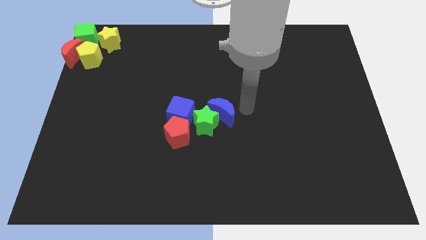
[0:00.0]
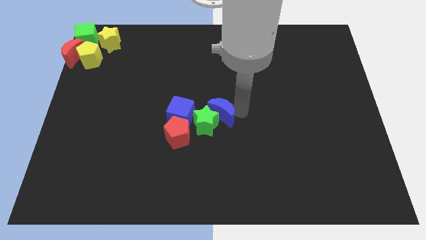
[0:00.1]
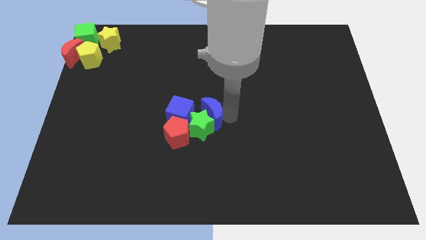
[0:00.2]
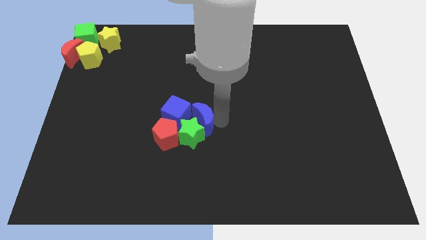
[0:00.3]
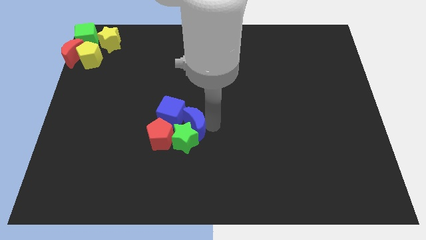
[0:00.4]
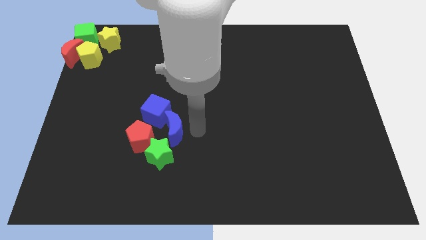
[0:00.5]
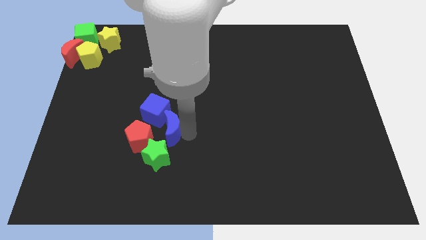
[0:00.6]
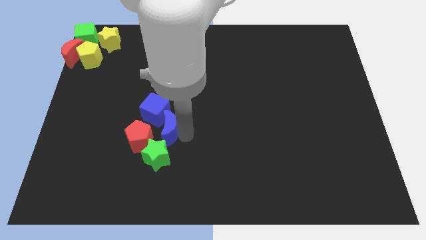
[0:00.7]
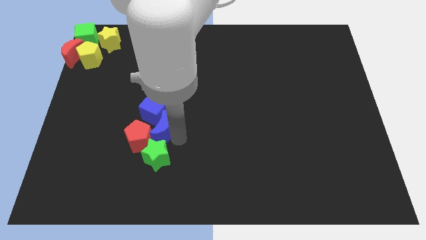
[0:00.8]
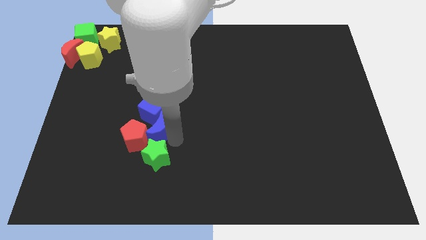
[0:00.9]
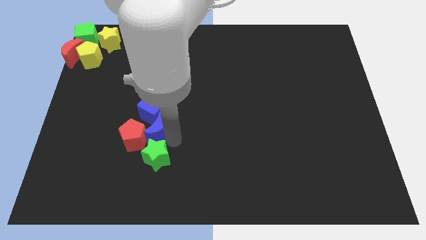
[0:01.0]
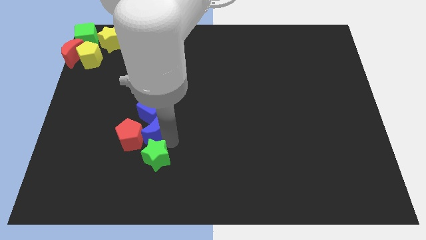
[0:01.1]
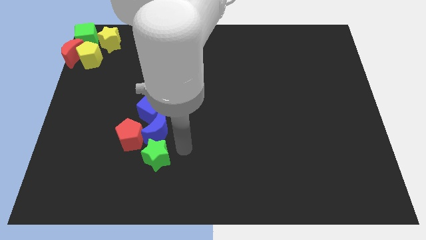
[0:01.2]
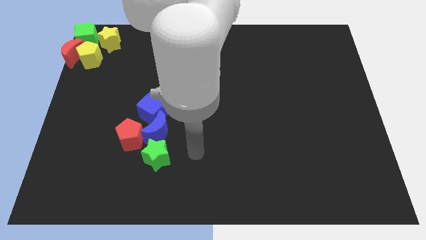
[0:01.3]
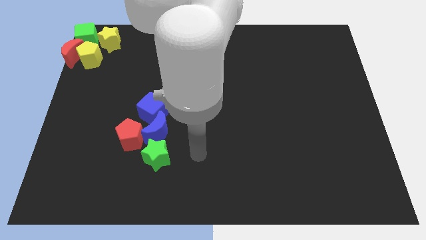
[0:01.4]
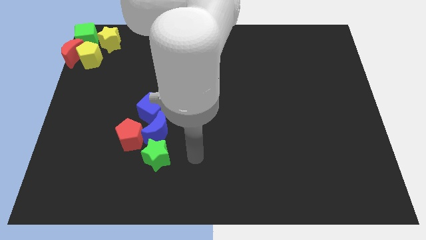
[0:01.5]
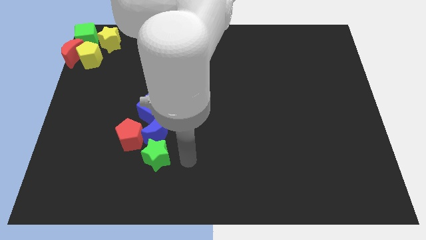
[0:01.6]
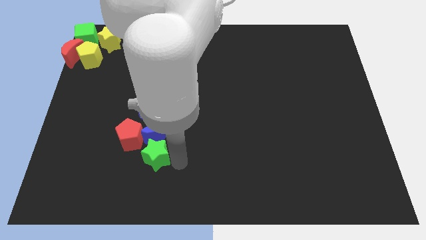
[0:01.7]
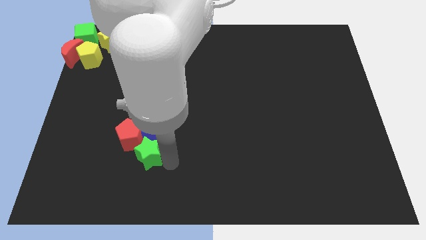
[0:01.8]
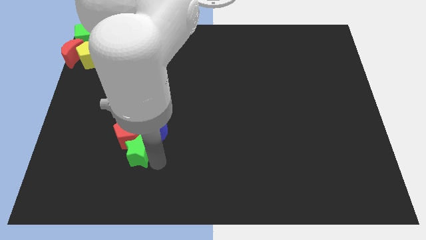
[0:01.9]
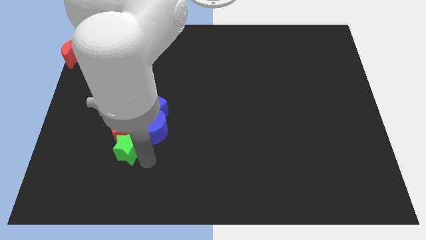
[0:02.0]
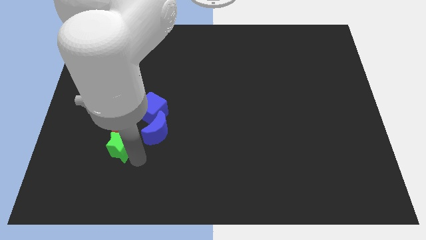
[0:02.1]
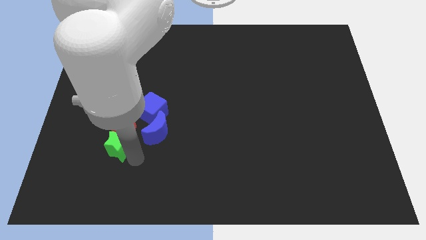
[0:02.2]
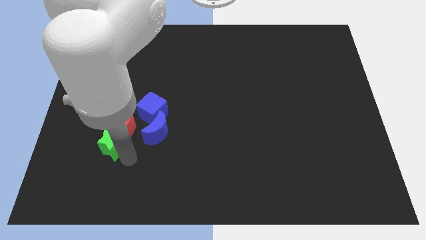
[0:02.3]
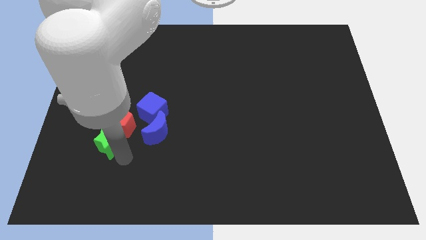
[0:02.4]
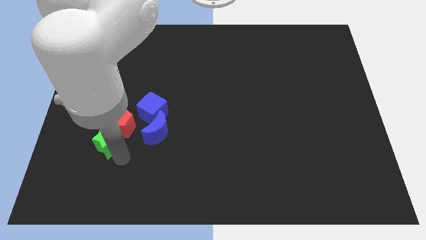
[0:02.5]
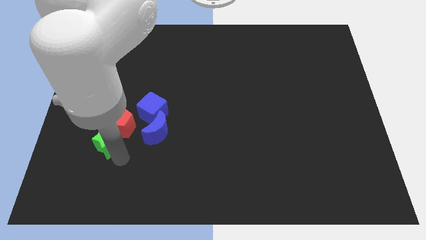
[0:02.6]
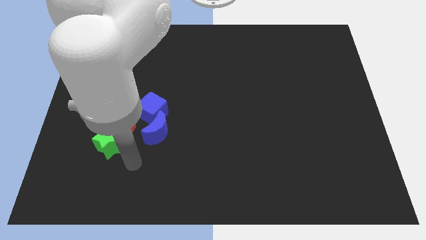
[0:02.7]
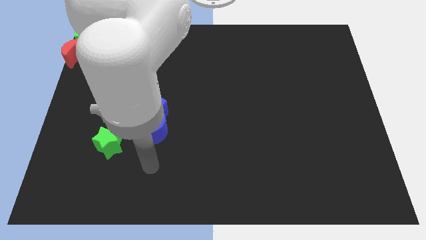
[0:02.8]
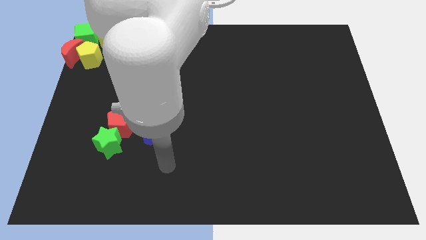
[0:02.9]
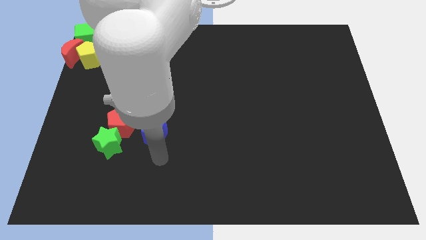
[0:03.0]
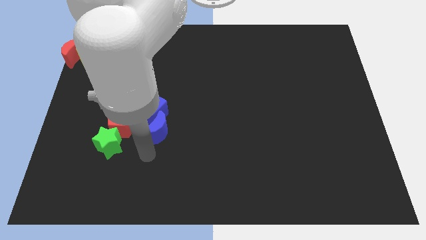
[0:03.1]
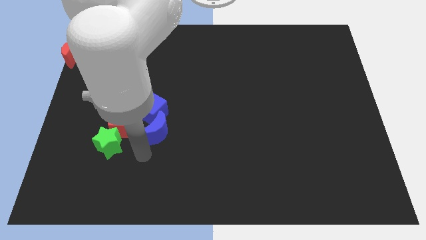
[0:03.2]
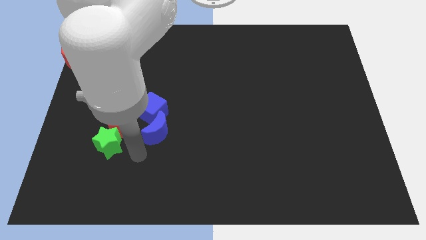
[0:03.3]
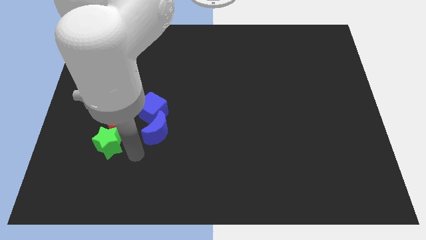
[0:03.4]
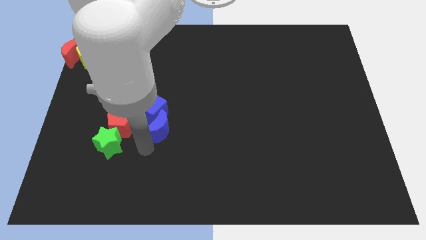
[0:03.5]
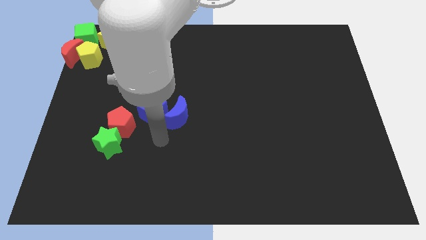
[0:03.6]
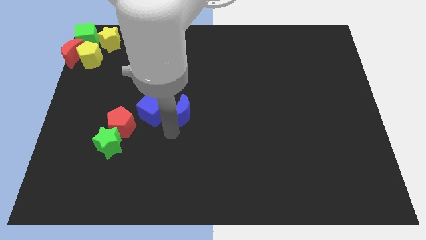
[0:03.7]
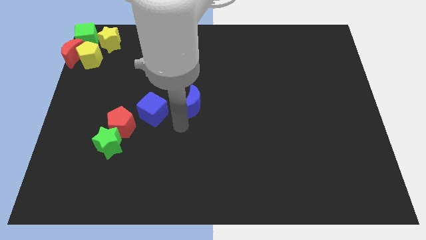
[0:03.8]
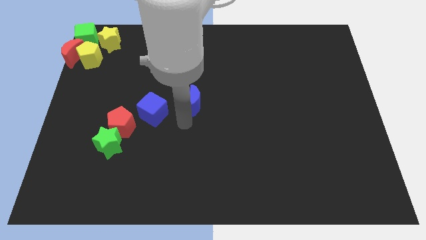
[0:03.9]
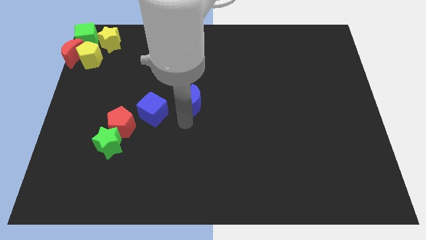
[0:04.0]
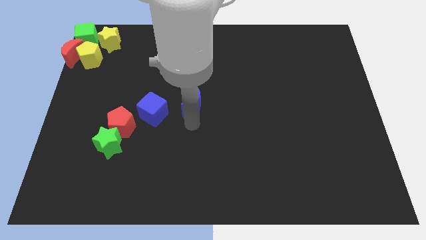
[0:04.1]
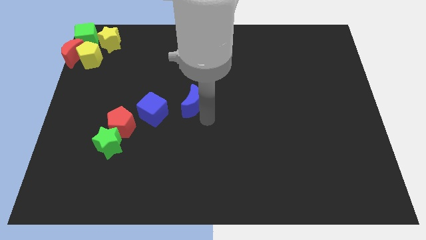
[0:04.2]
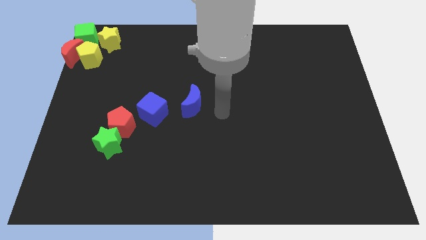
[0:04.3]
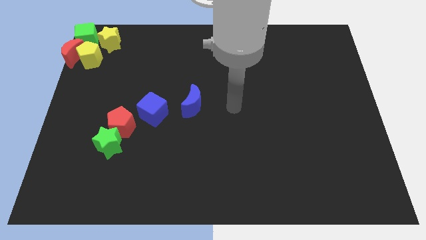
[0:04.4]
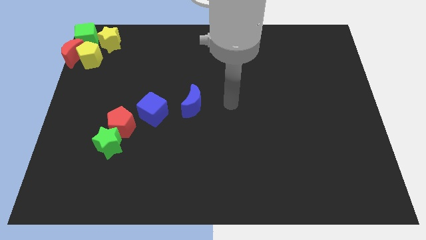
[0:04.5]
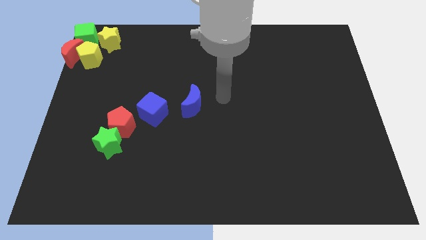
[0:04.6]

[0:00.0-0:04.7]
make a diagonal line out of blue blocks green star and the red pentagon

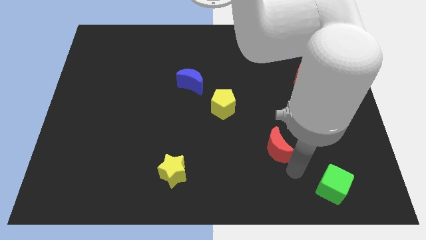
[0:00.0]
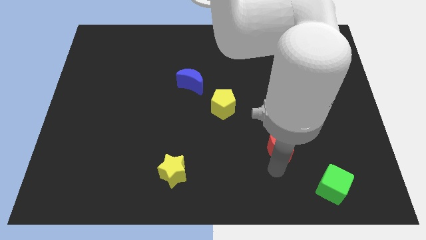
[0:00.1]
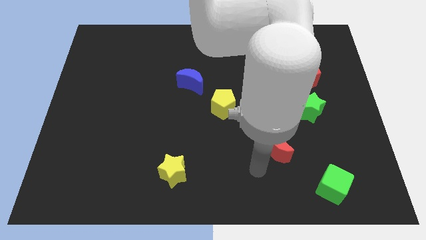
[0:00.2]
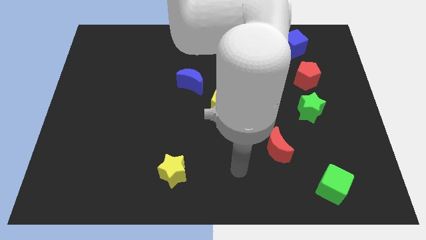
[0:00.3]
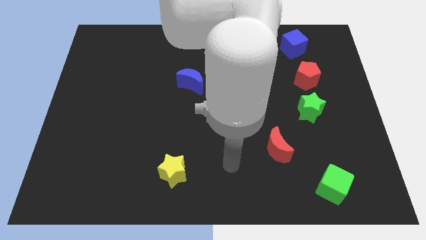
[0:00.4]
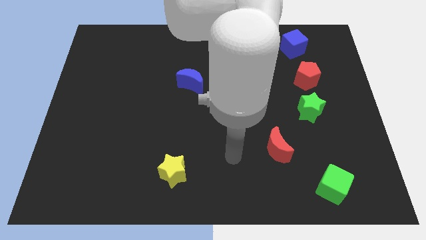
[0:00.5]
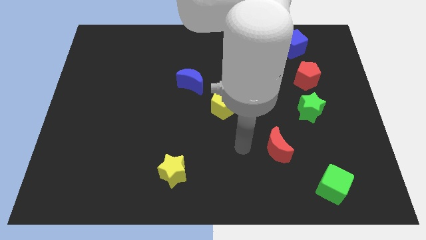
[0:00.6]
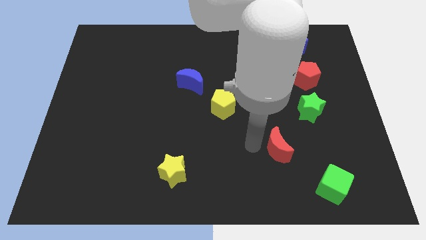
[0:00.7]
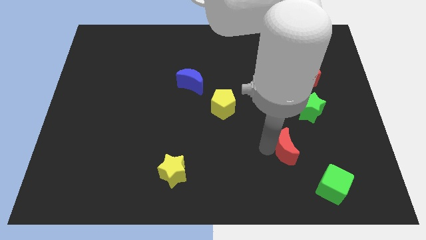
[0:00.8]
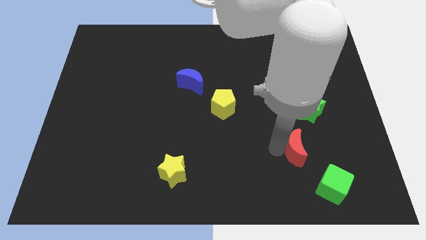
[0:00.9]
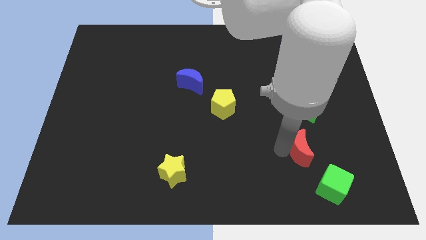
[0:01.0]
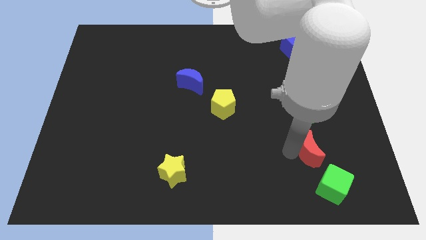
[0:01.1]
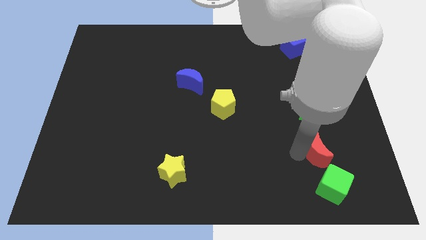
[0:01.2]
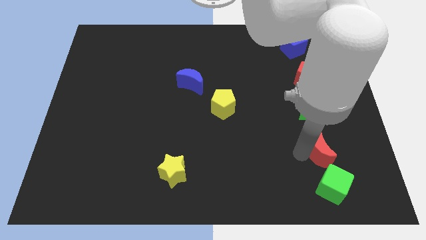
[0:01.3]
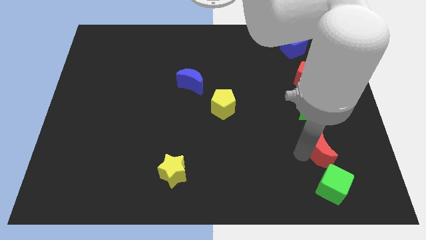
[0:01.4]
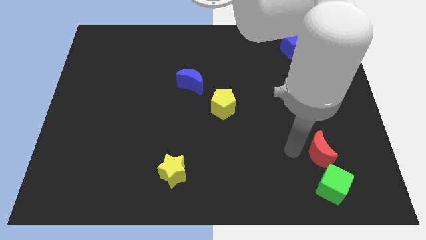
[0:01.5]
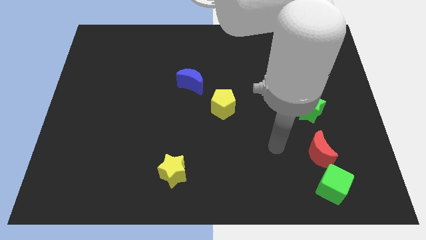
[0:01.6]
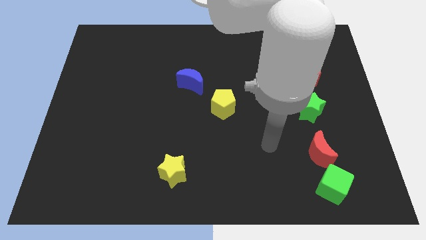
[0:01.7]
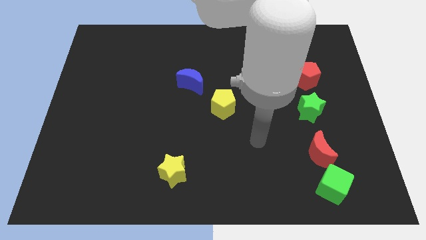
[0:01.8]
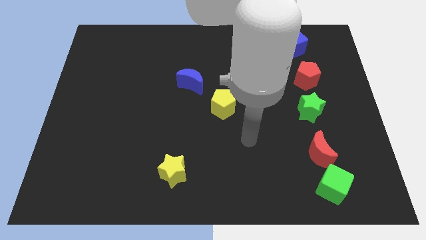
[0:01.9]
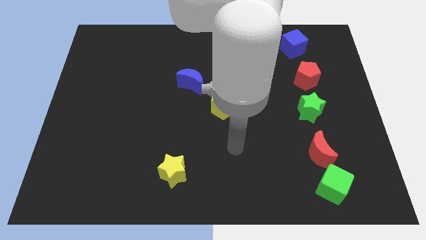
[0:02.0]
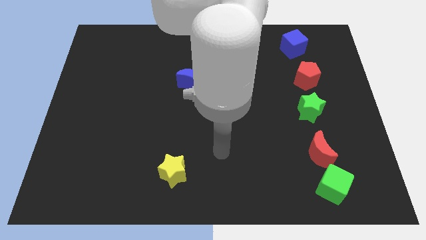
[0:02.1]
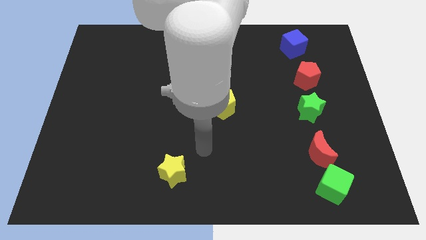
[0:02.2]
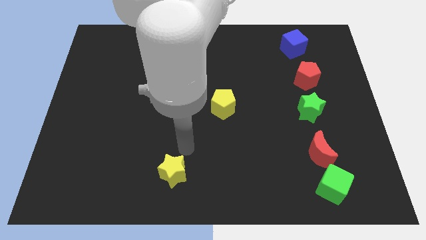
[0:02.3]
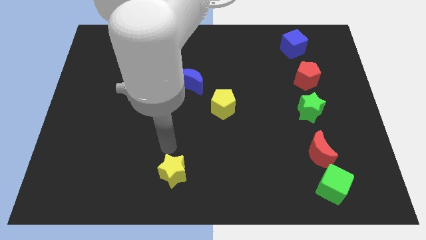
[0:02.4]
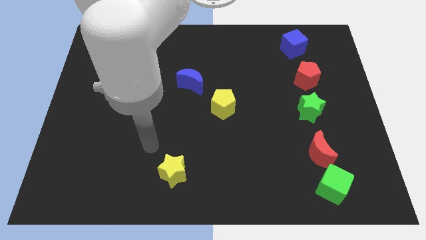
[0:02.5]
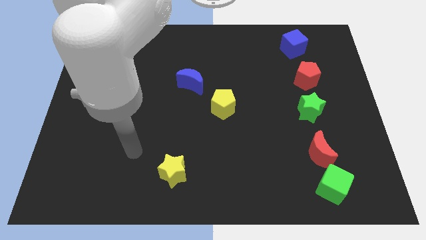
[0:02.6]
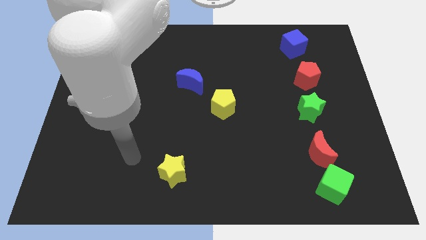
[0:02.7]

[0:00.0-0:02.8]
place red crescent on top of green cube

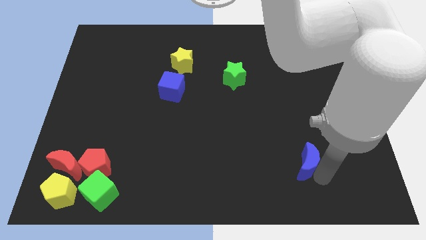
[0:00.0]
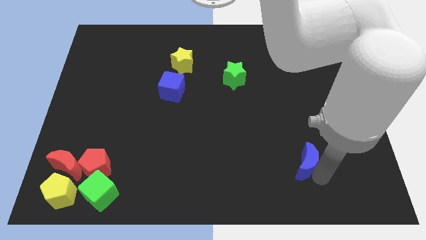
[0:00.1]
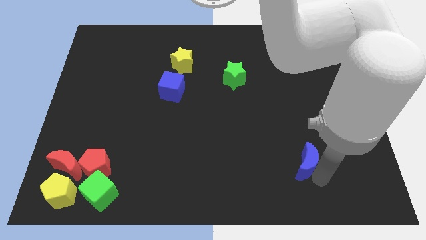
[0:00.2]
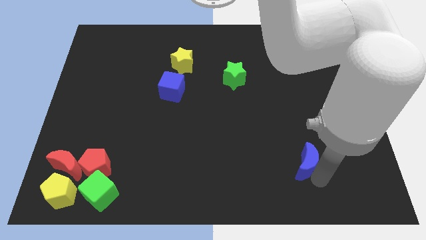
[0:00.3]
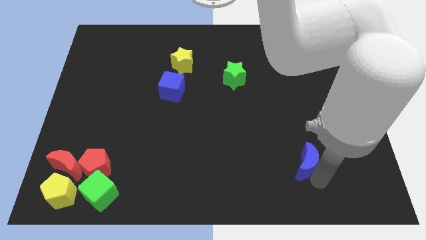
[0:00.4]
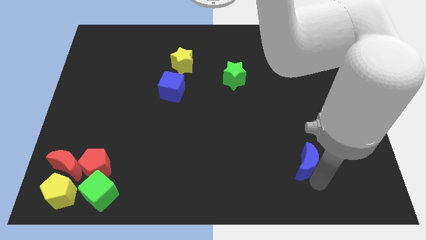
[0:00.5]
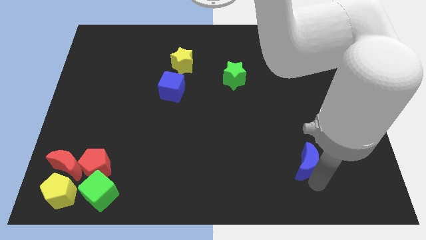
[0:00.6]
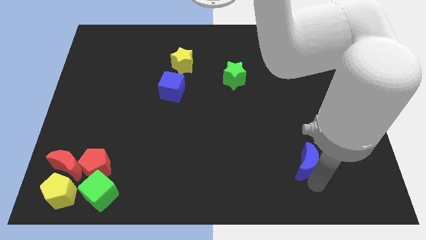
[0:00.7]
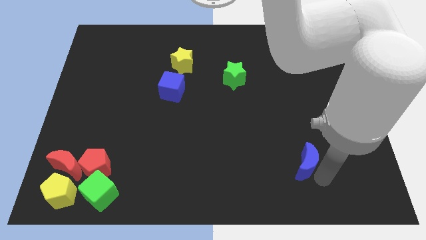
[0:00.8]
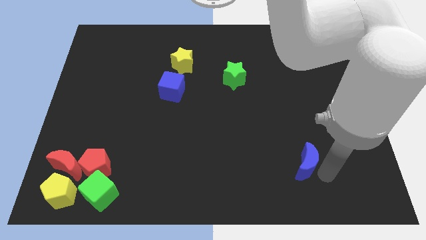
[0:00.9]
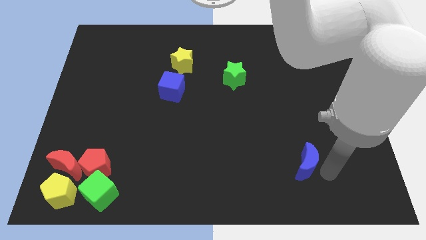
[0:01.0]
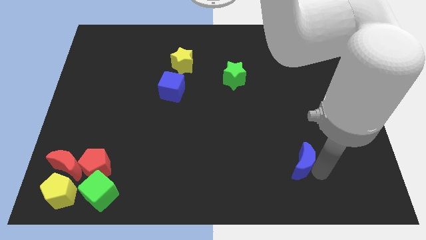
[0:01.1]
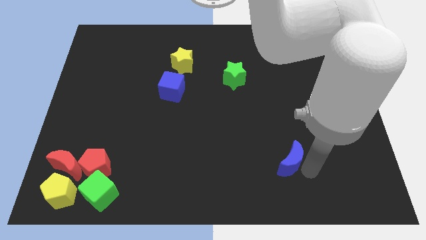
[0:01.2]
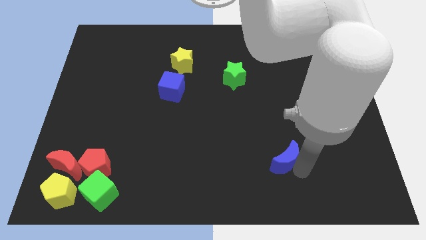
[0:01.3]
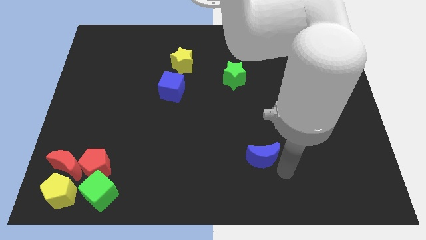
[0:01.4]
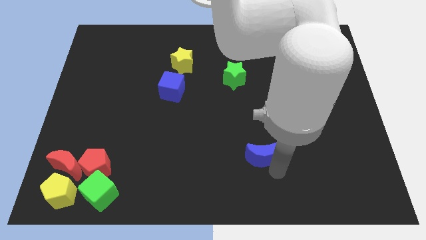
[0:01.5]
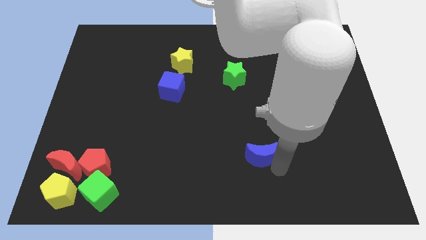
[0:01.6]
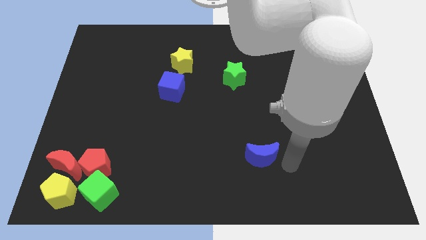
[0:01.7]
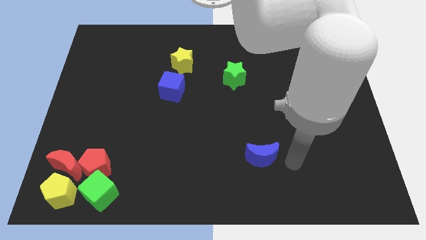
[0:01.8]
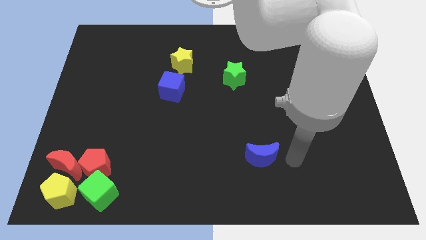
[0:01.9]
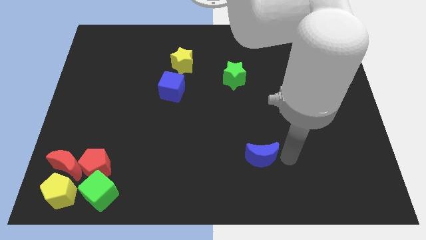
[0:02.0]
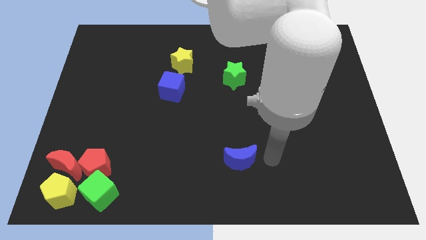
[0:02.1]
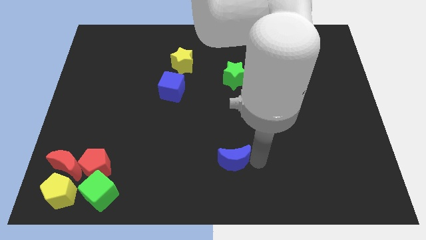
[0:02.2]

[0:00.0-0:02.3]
move the blue crescent vertical below green star
